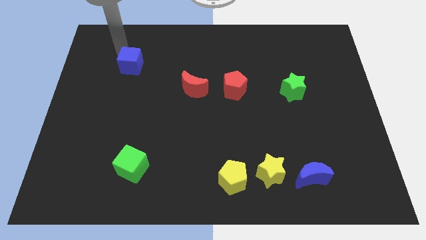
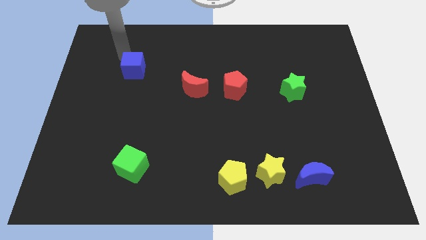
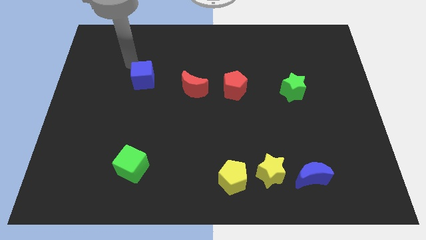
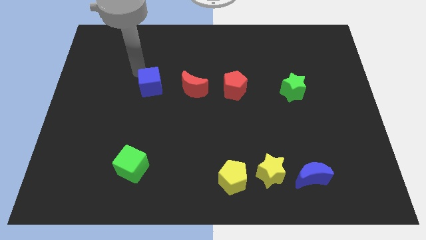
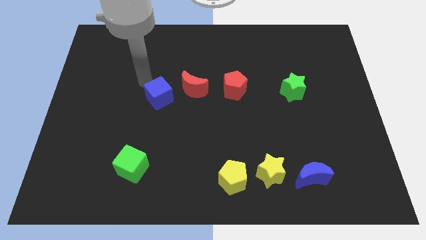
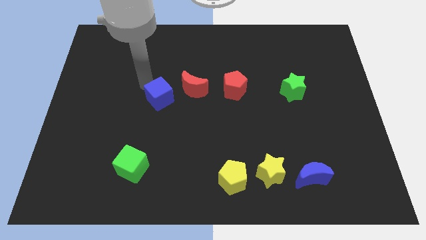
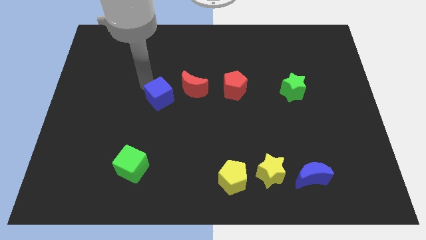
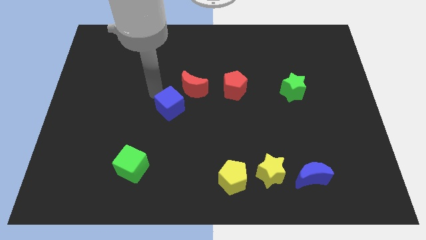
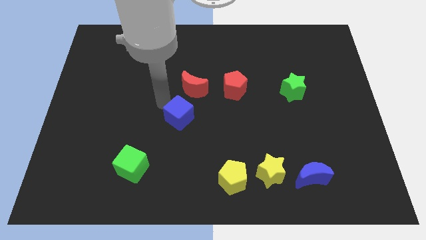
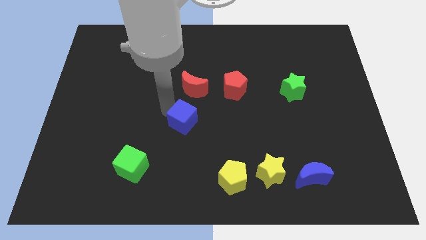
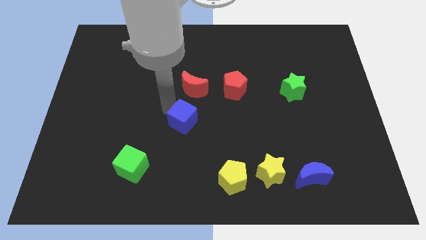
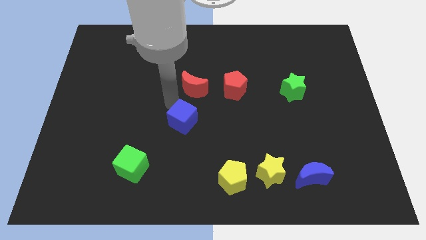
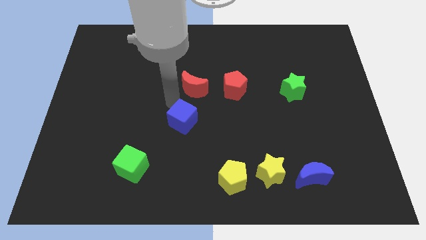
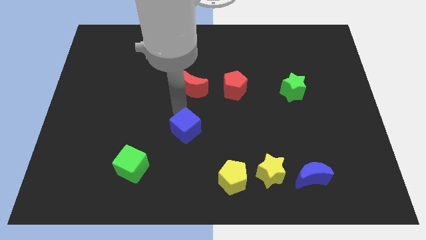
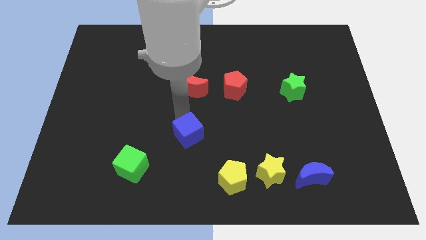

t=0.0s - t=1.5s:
place the blue cube below the red moon

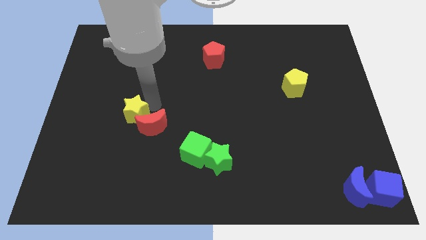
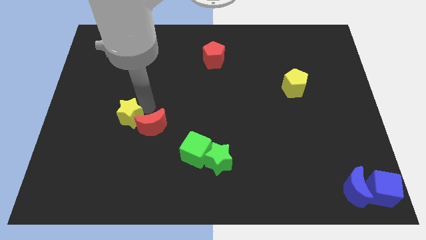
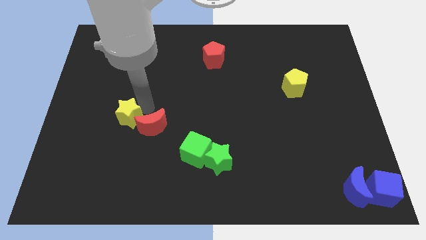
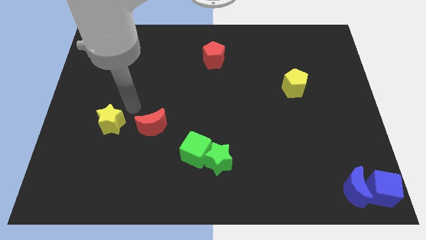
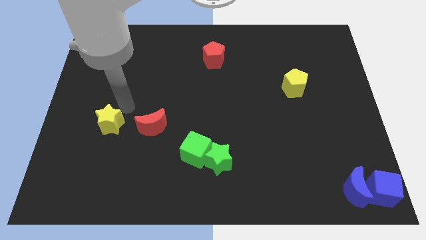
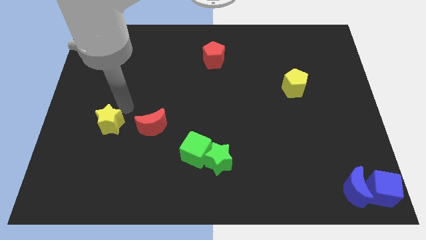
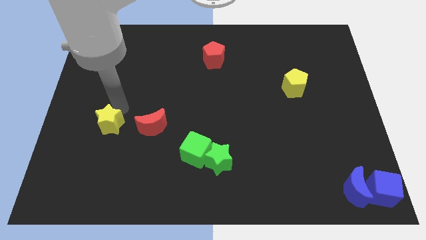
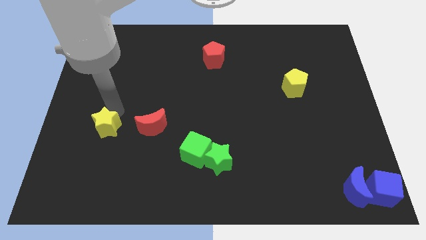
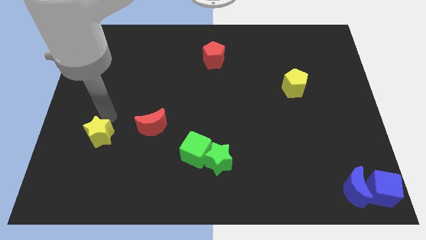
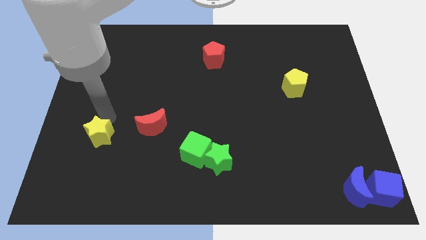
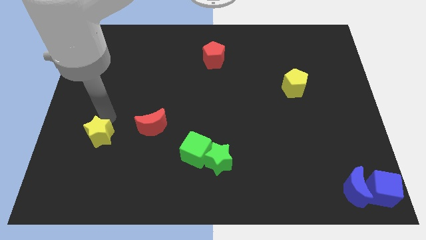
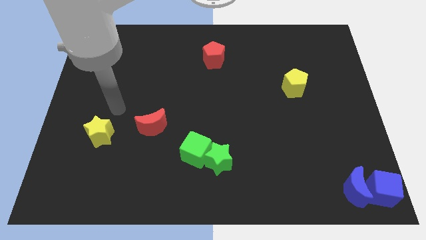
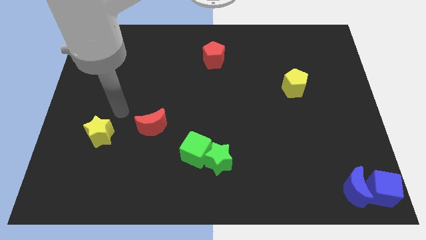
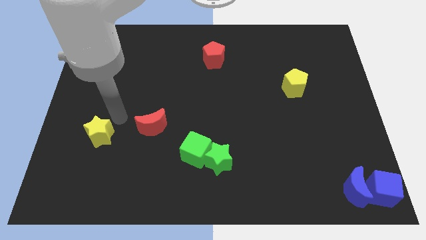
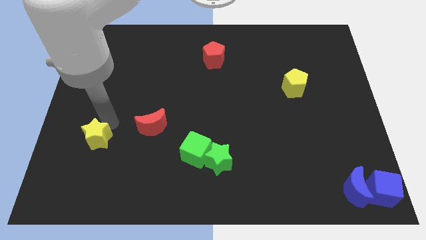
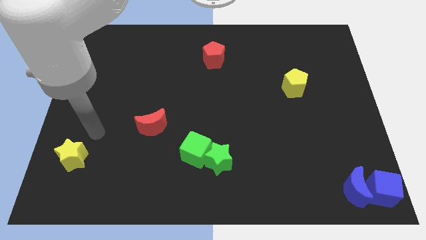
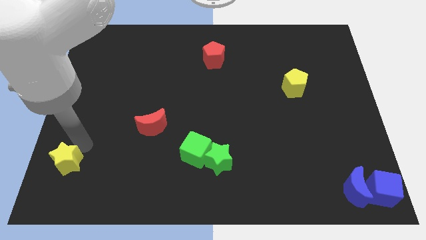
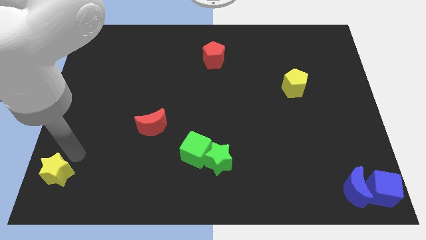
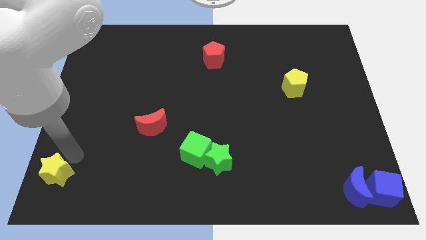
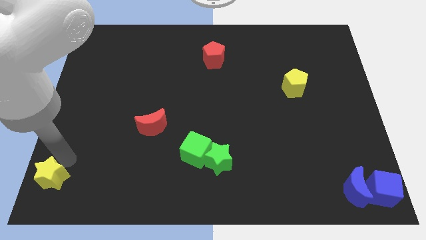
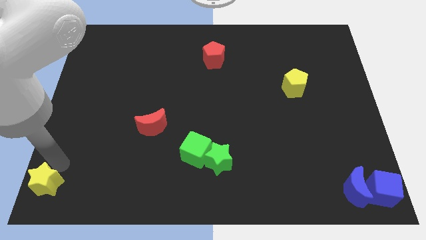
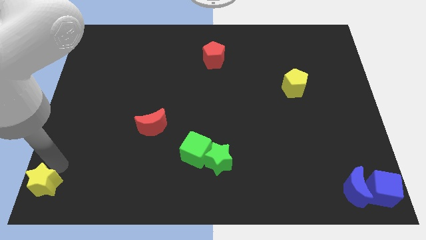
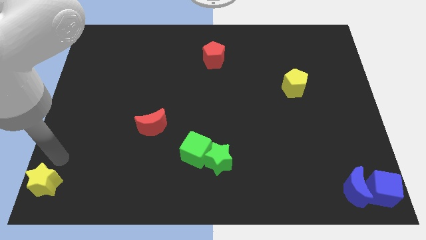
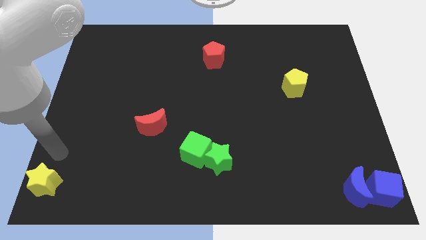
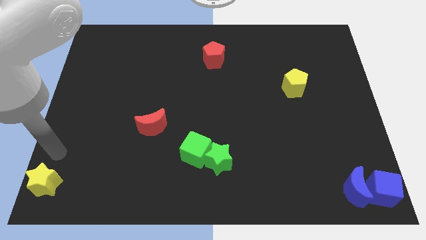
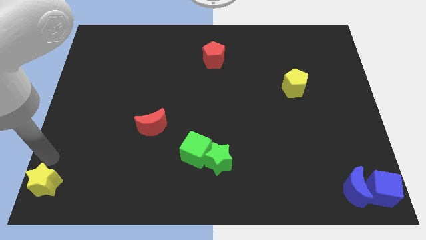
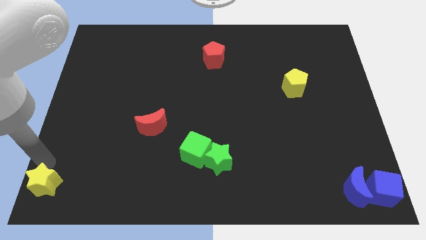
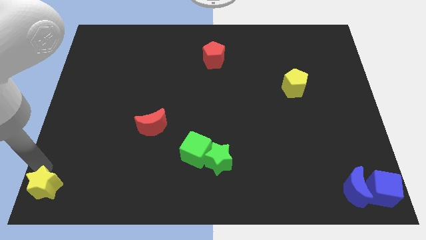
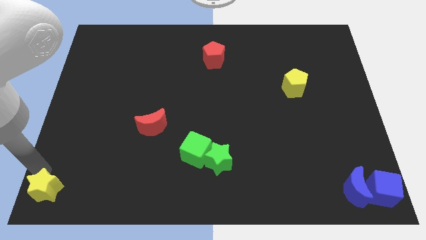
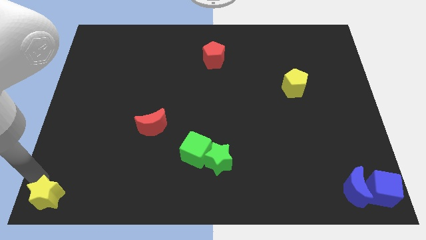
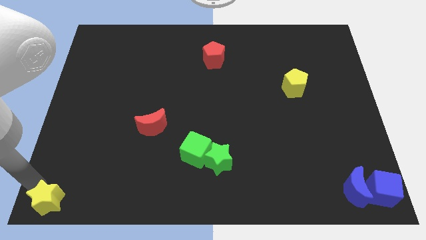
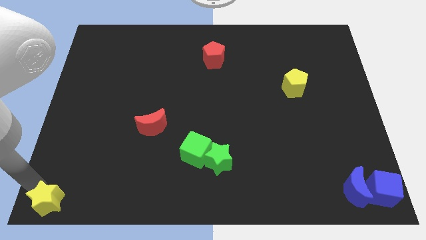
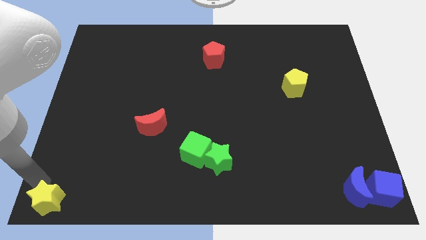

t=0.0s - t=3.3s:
place yellow star to the bottom left corner of the board

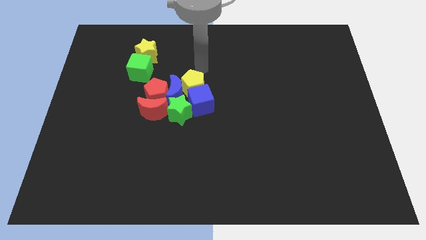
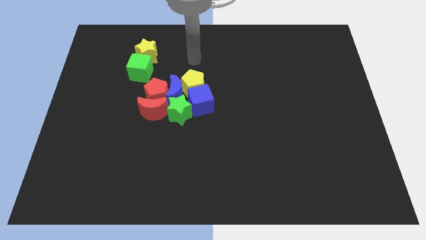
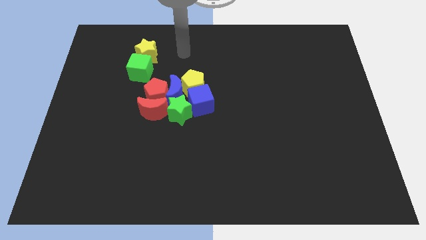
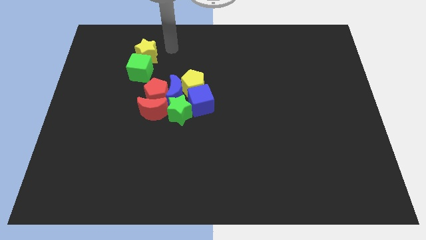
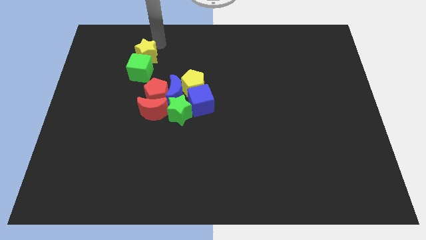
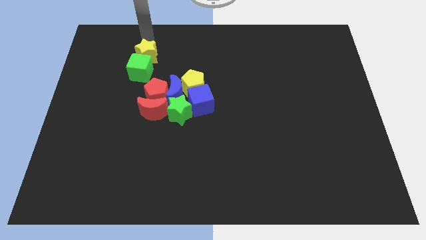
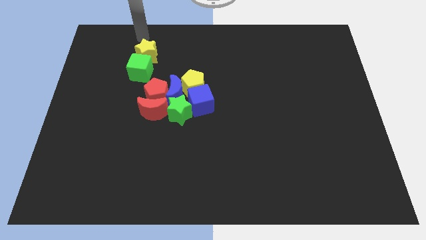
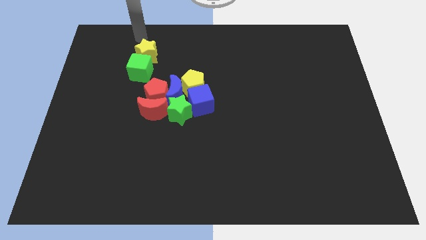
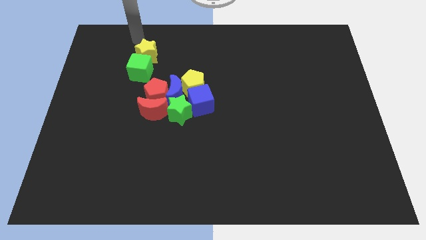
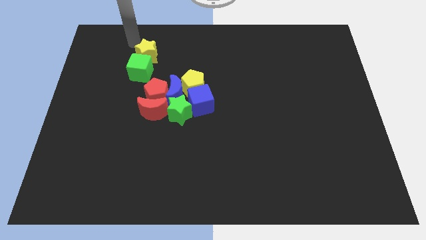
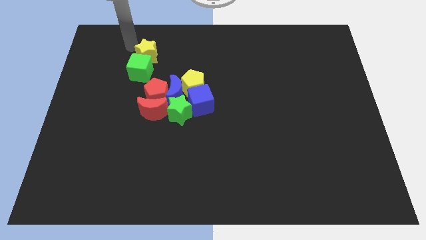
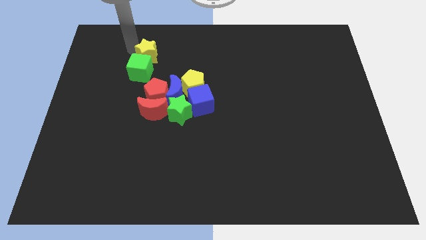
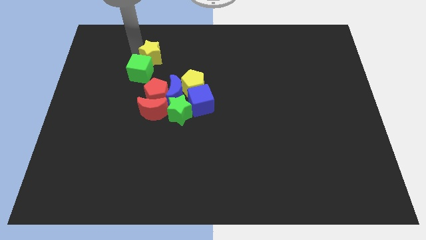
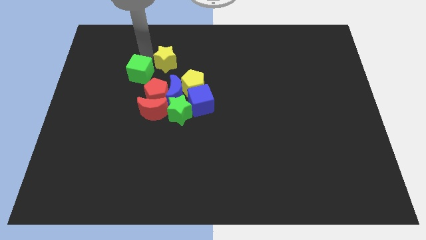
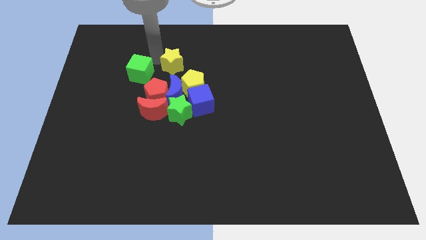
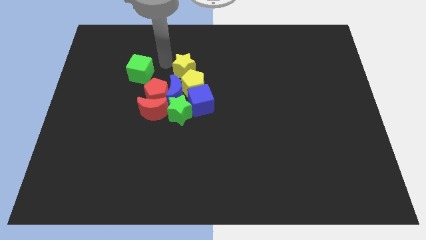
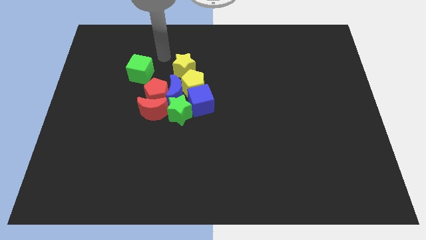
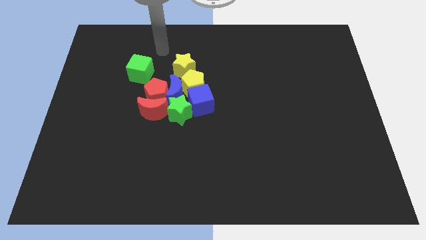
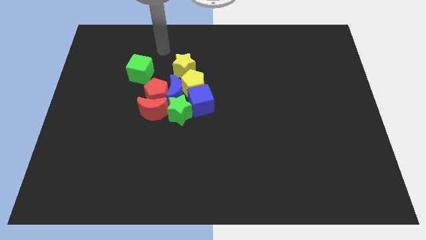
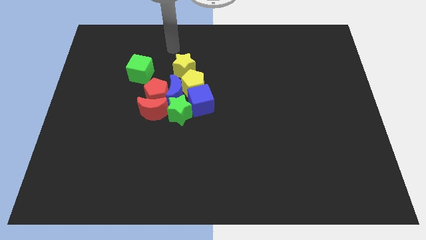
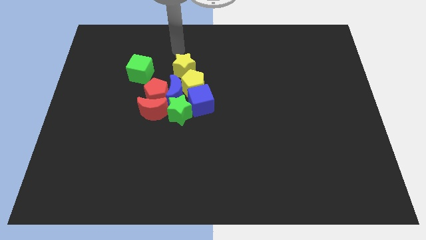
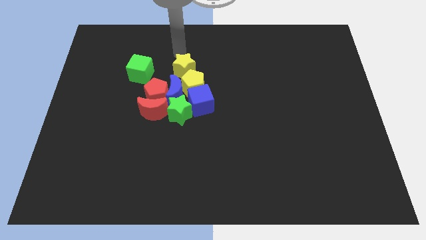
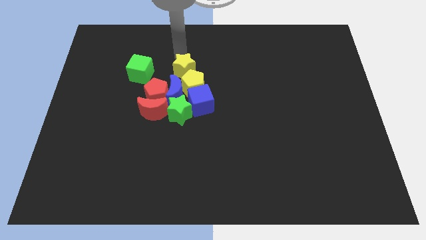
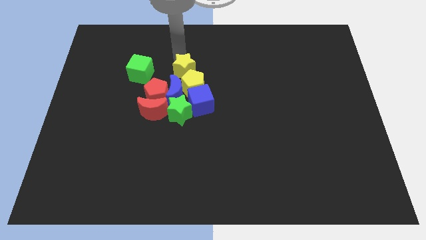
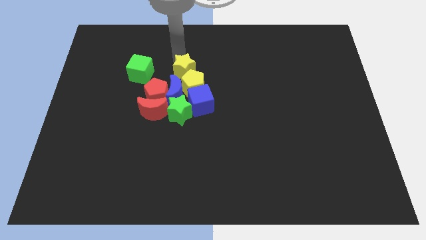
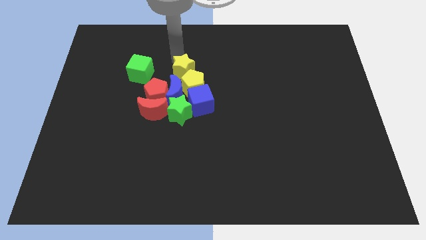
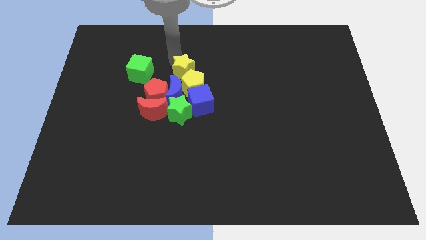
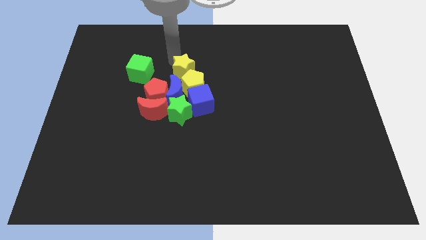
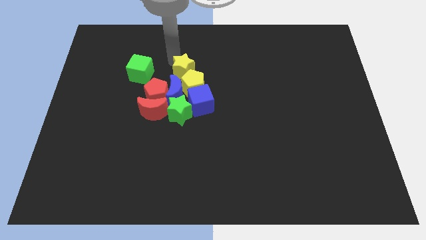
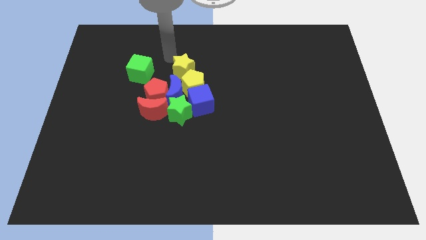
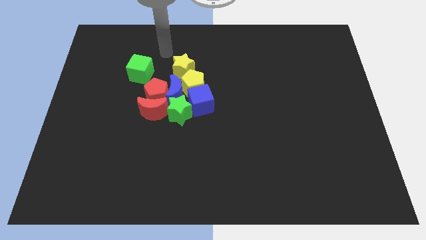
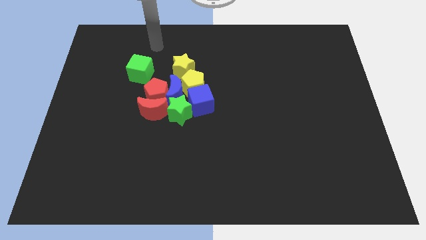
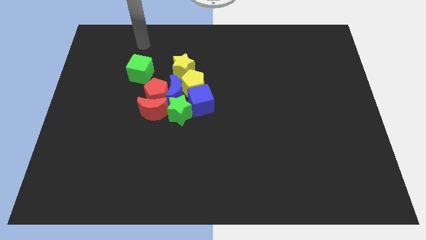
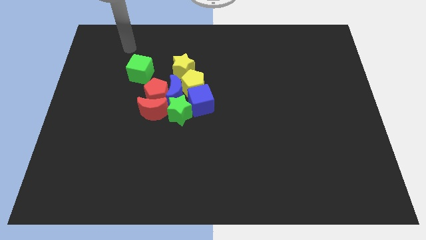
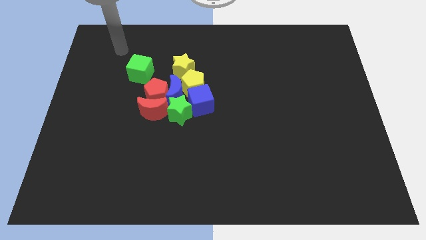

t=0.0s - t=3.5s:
move the yellow star to the top side of the yellow pentagon

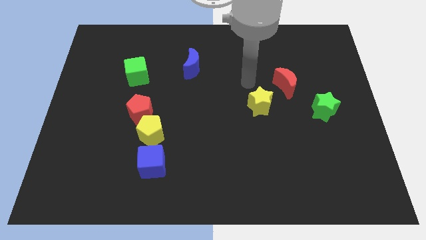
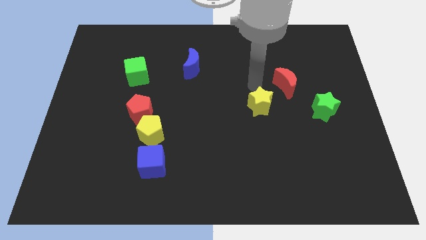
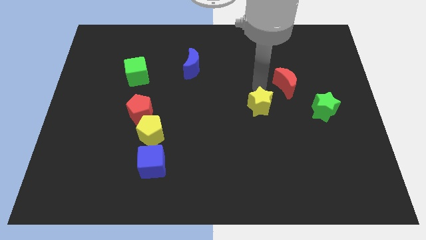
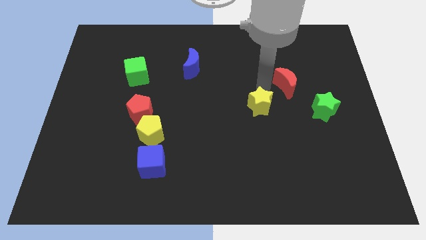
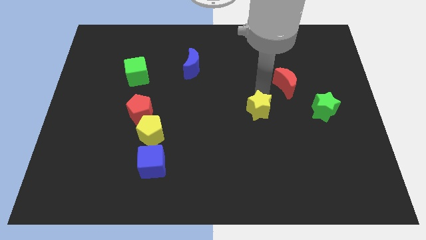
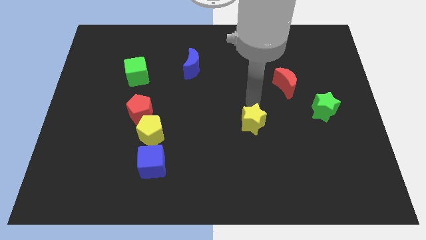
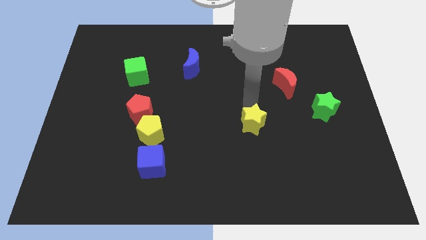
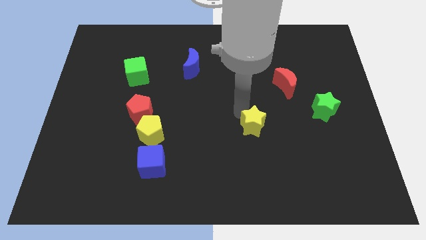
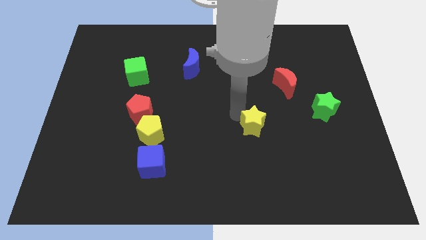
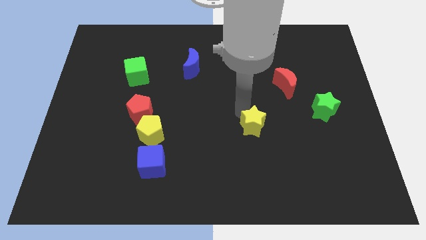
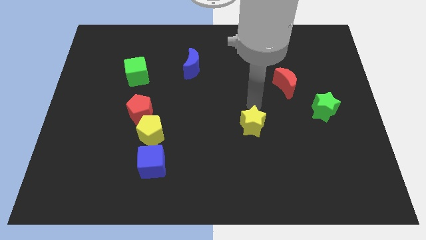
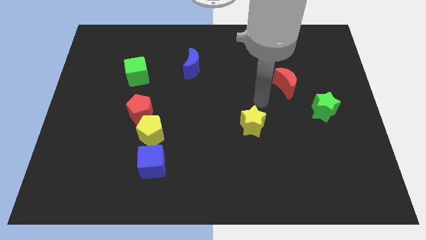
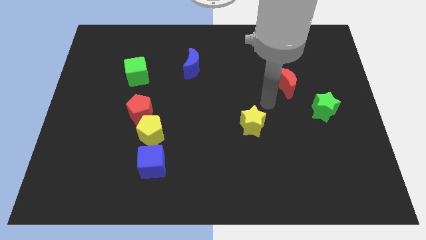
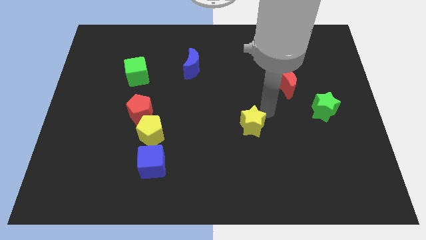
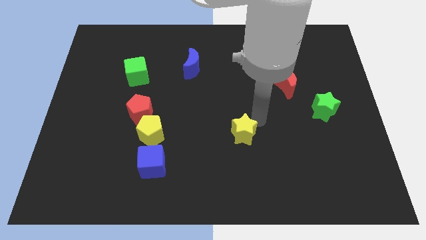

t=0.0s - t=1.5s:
place the yellow star parallel to the yellow pentagon
